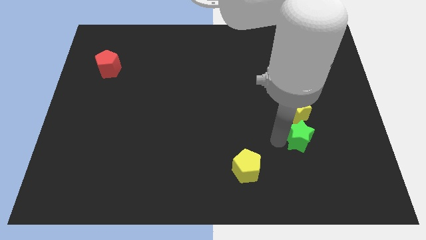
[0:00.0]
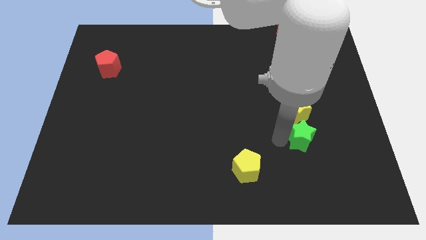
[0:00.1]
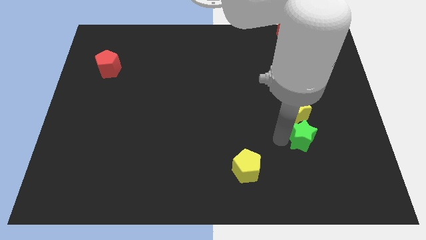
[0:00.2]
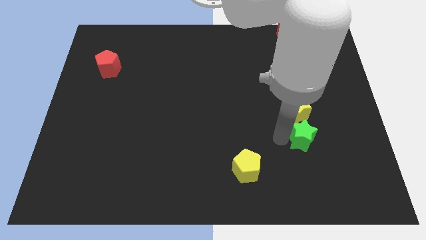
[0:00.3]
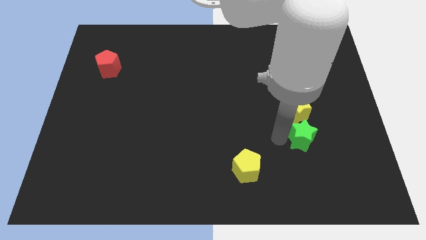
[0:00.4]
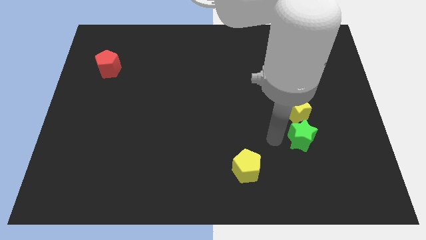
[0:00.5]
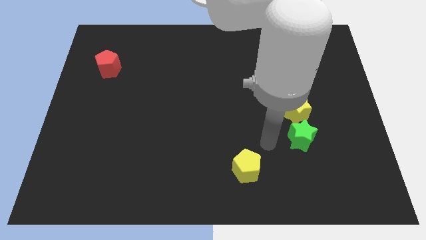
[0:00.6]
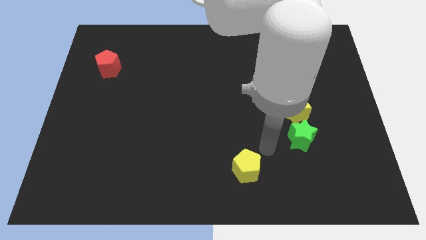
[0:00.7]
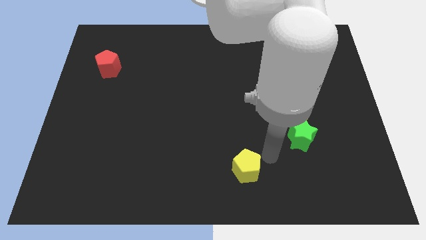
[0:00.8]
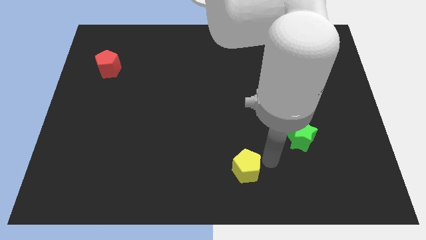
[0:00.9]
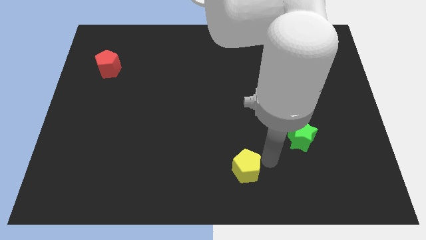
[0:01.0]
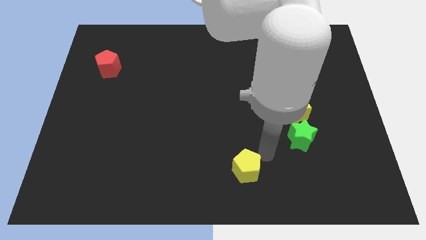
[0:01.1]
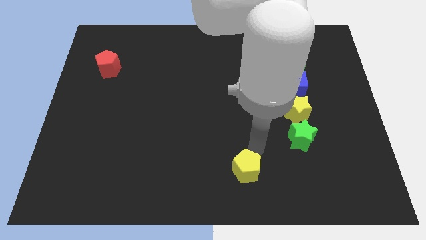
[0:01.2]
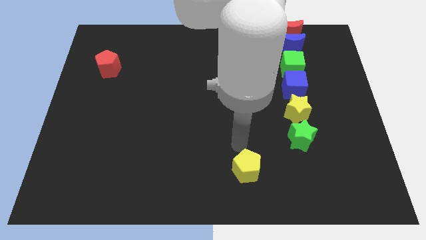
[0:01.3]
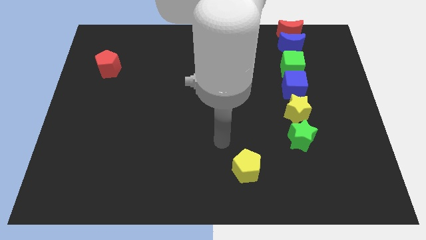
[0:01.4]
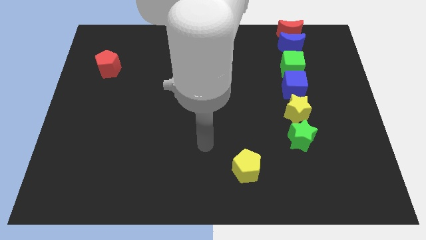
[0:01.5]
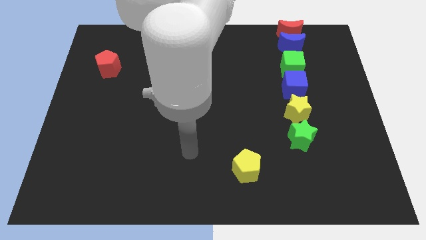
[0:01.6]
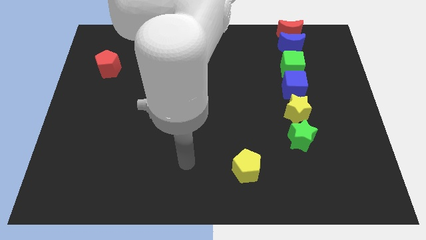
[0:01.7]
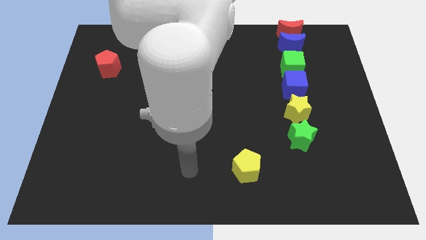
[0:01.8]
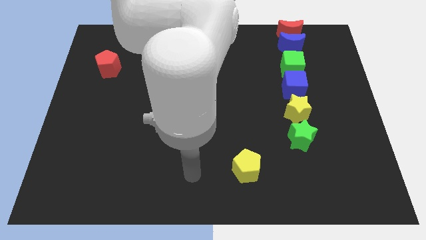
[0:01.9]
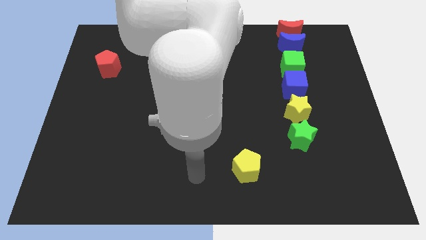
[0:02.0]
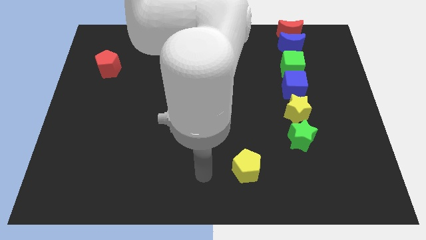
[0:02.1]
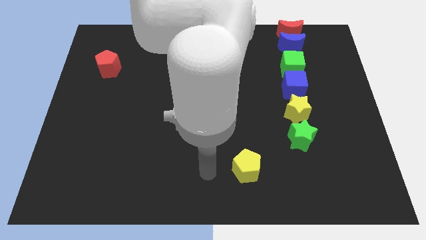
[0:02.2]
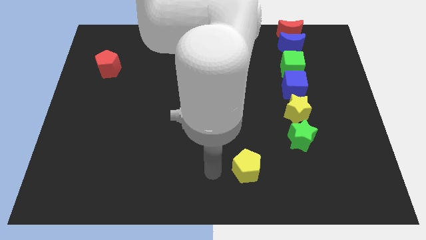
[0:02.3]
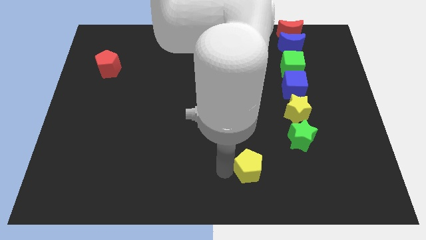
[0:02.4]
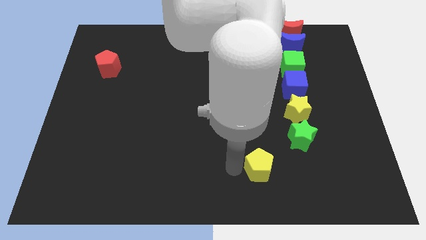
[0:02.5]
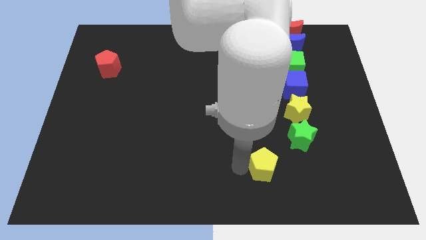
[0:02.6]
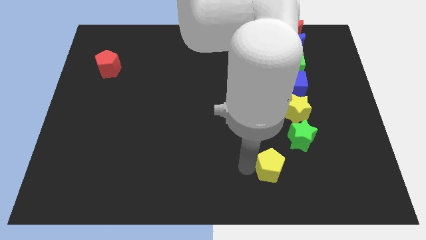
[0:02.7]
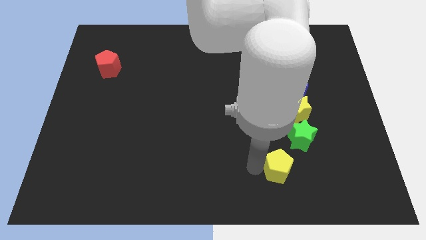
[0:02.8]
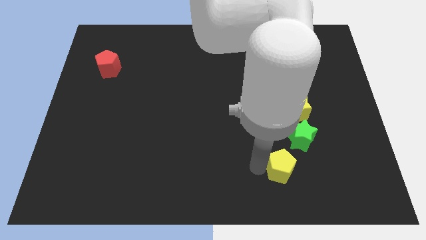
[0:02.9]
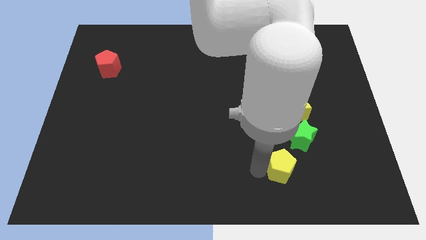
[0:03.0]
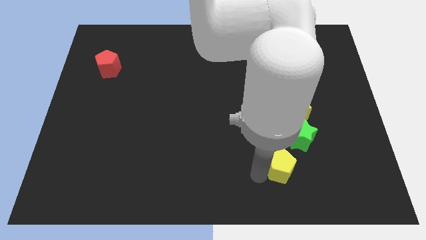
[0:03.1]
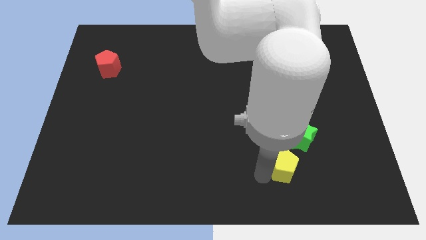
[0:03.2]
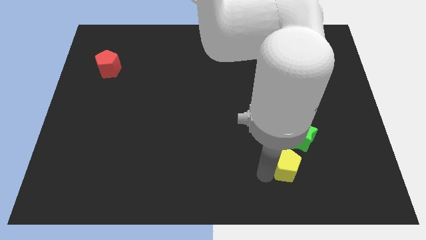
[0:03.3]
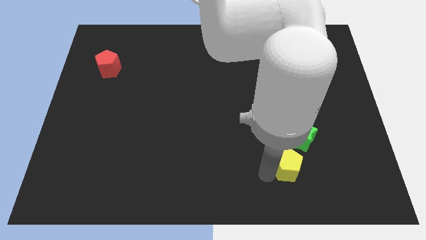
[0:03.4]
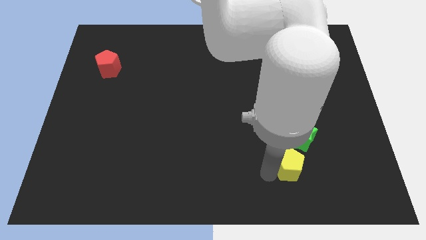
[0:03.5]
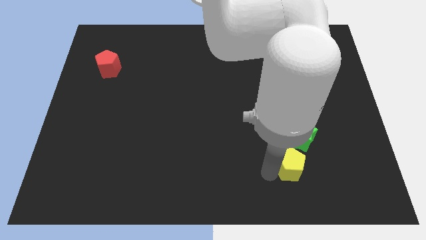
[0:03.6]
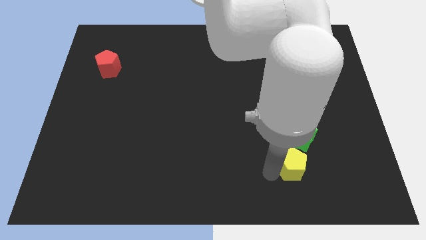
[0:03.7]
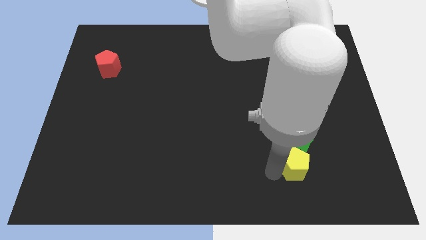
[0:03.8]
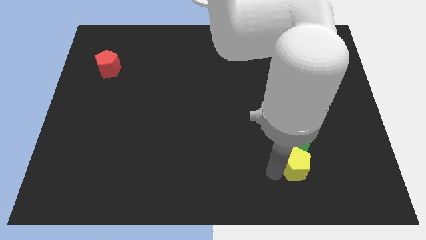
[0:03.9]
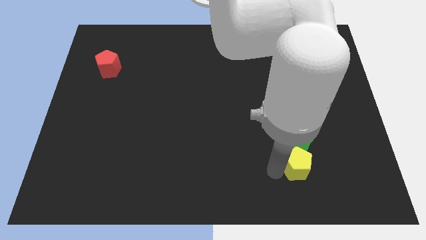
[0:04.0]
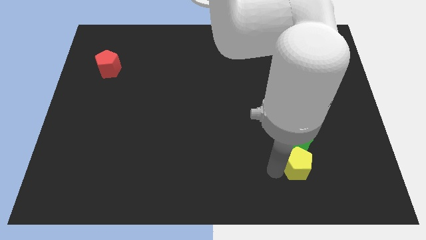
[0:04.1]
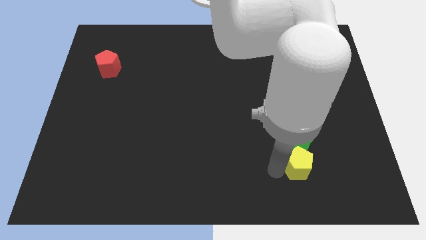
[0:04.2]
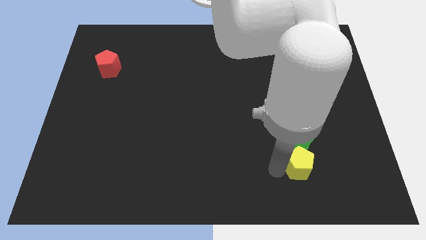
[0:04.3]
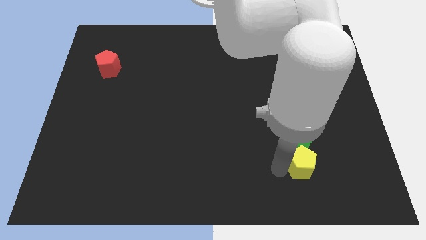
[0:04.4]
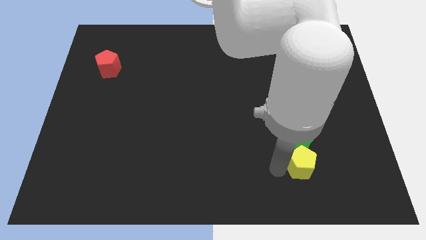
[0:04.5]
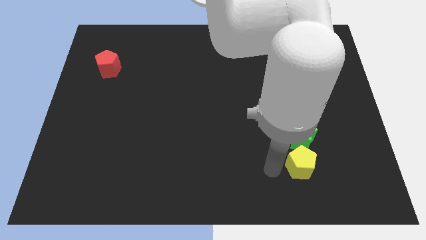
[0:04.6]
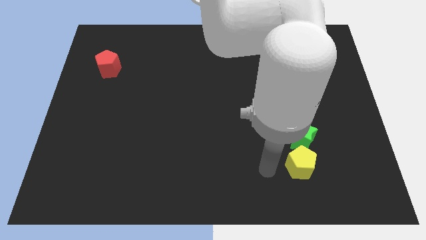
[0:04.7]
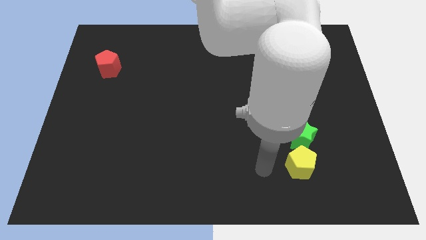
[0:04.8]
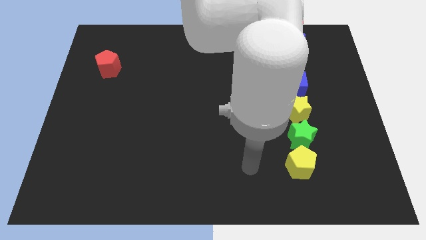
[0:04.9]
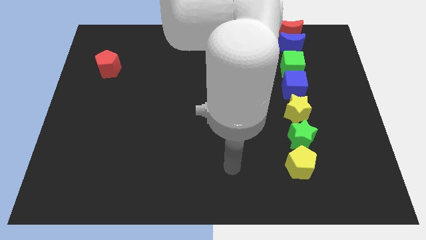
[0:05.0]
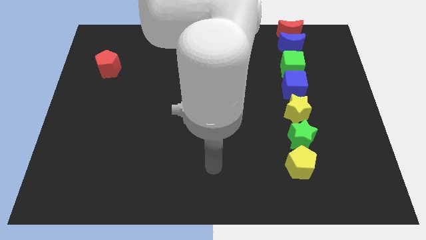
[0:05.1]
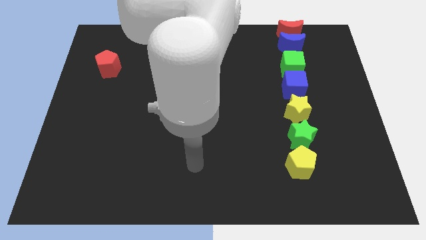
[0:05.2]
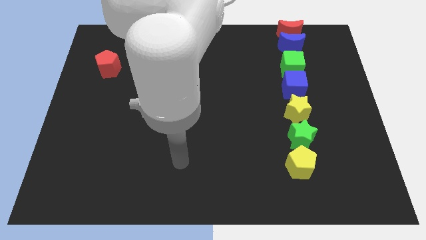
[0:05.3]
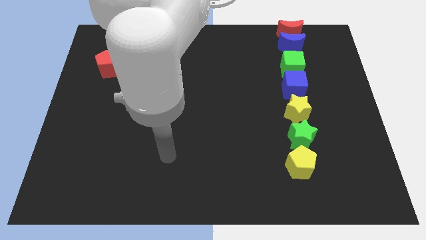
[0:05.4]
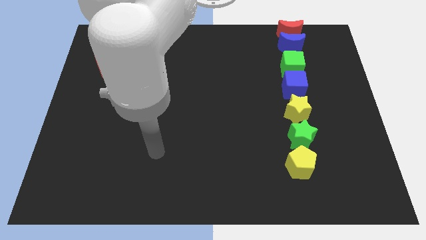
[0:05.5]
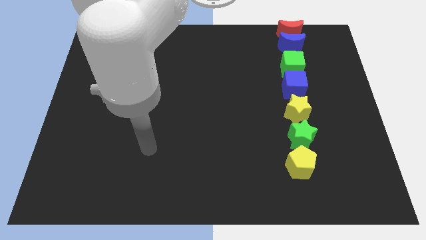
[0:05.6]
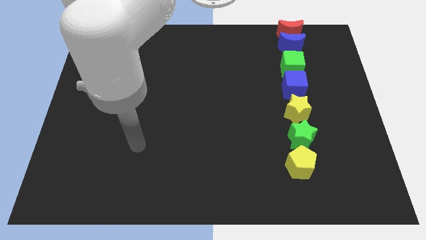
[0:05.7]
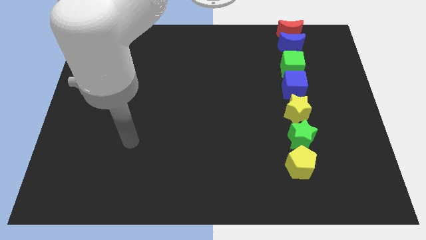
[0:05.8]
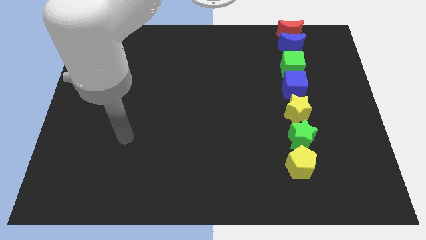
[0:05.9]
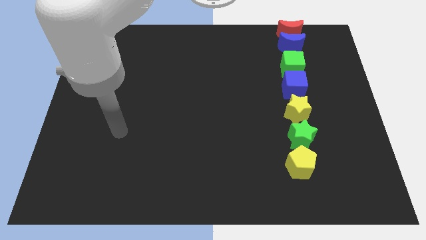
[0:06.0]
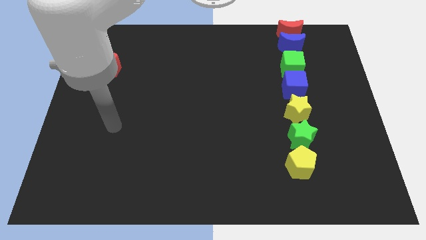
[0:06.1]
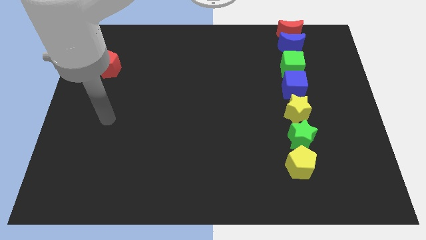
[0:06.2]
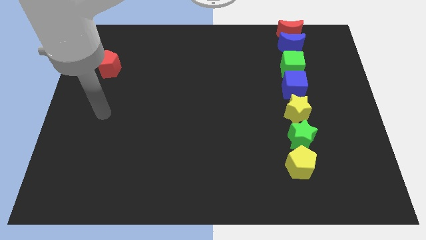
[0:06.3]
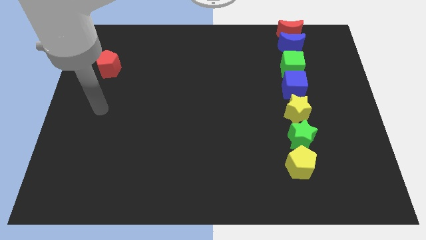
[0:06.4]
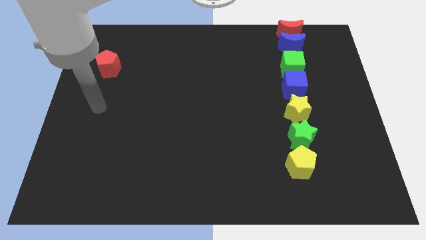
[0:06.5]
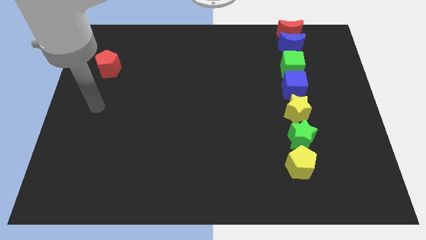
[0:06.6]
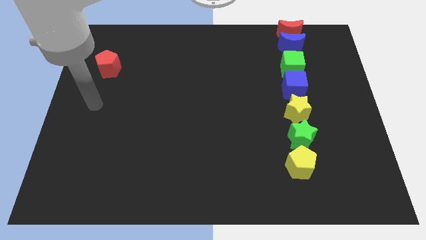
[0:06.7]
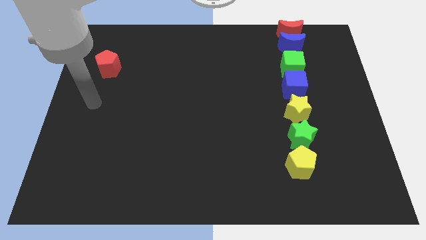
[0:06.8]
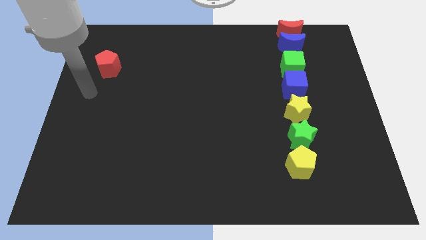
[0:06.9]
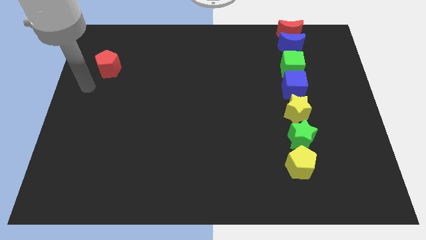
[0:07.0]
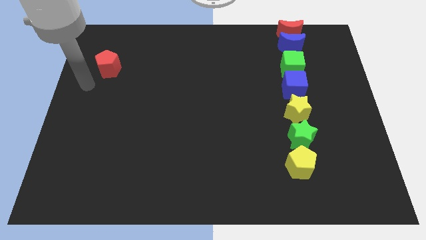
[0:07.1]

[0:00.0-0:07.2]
move the yellow pentagon to the bottom of the green star

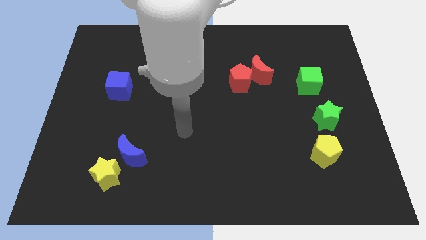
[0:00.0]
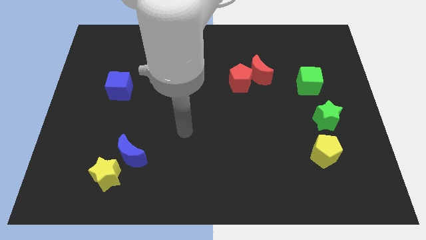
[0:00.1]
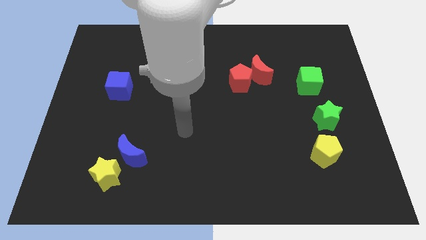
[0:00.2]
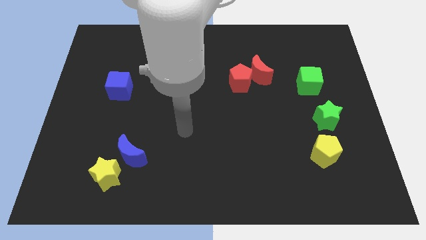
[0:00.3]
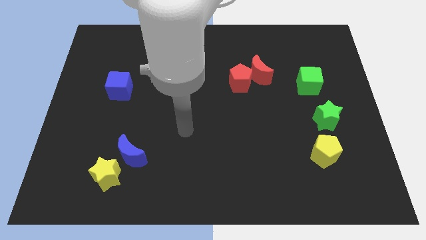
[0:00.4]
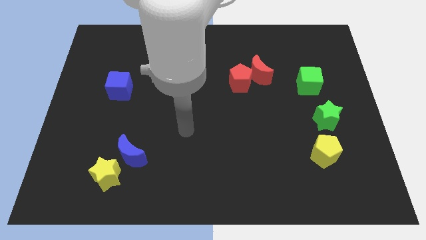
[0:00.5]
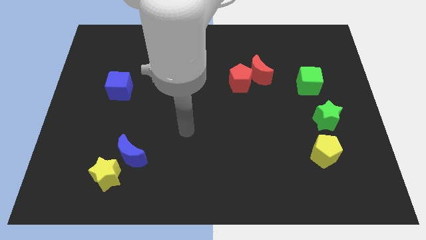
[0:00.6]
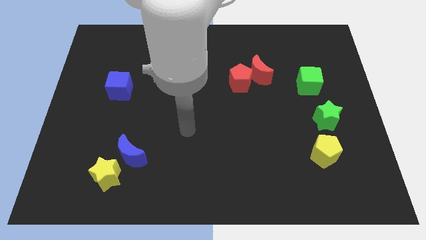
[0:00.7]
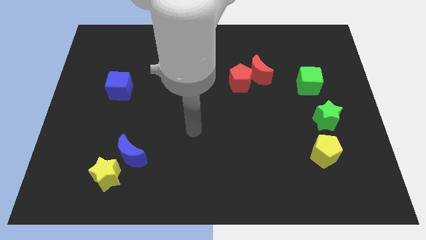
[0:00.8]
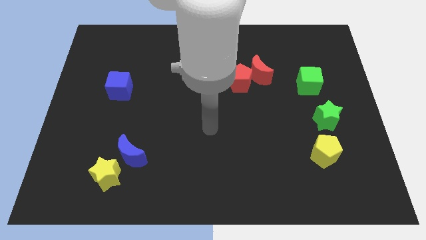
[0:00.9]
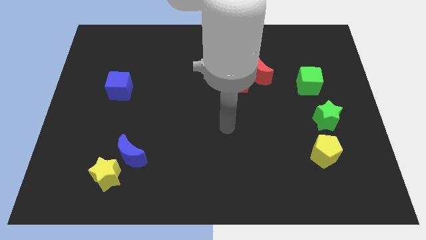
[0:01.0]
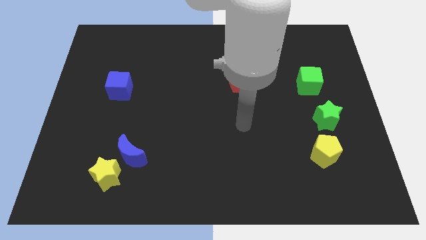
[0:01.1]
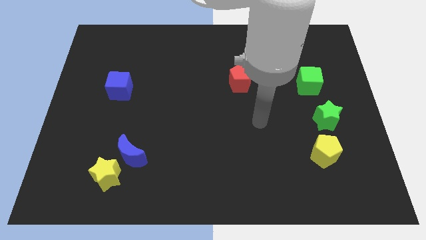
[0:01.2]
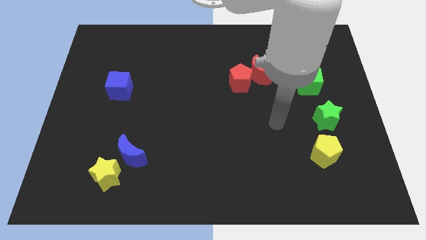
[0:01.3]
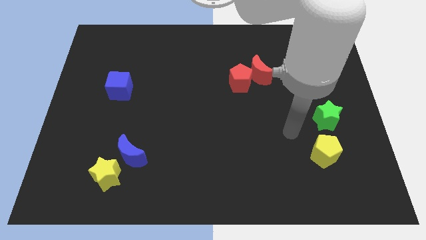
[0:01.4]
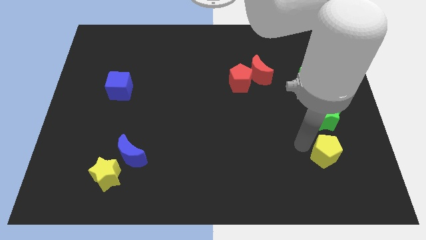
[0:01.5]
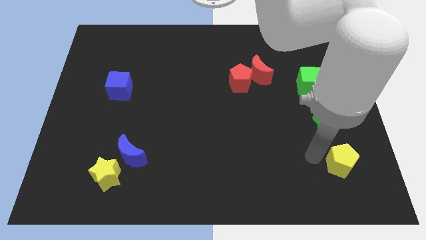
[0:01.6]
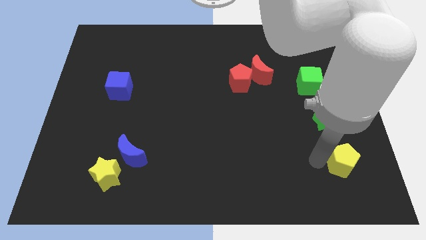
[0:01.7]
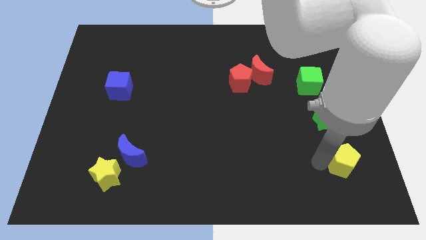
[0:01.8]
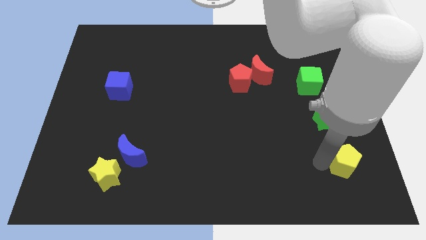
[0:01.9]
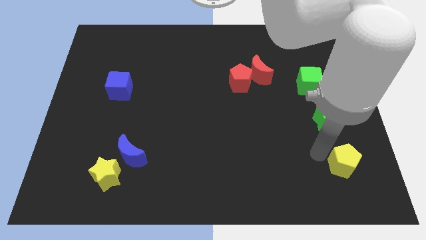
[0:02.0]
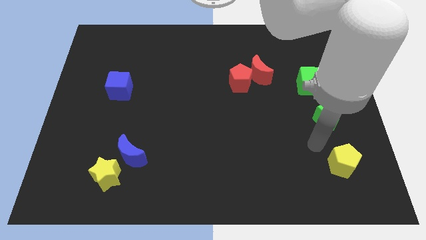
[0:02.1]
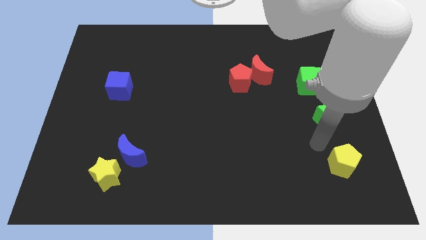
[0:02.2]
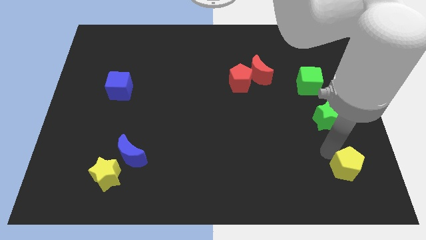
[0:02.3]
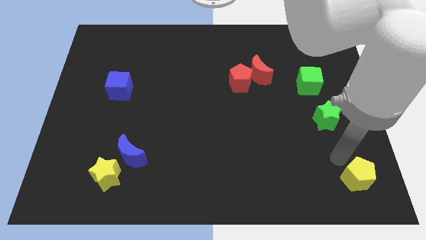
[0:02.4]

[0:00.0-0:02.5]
push the yellow pentagon towards the bottom right corner
